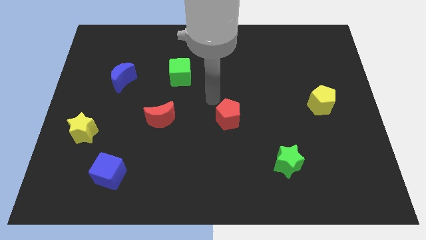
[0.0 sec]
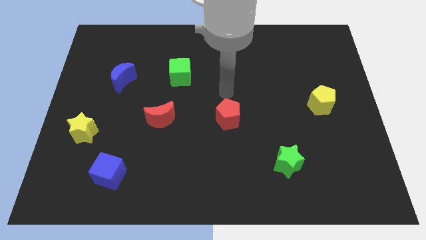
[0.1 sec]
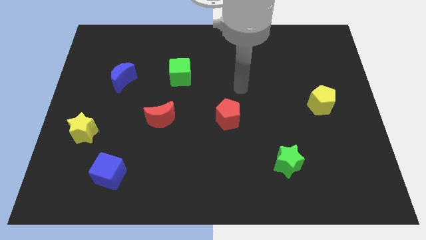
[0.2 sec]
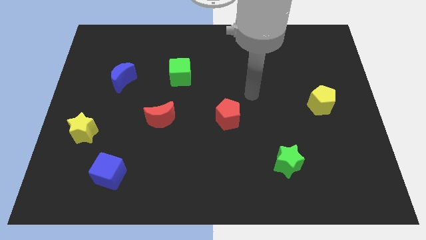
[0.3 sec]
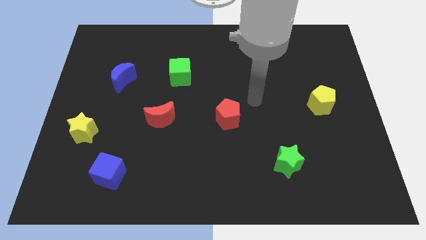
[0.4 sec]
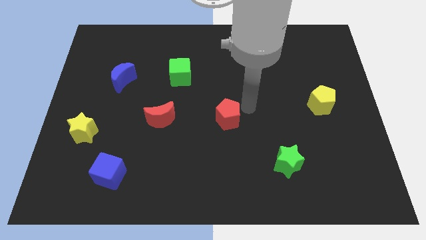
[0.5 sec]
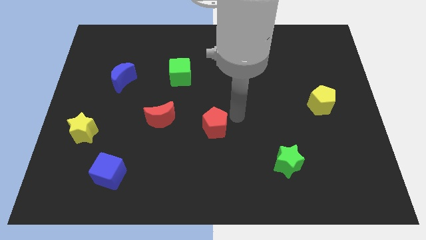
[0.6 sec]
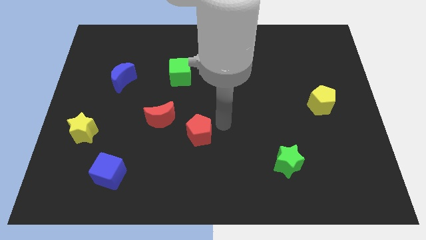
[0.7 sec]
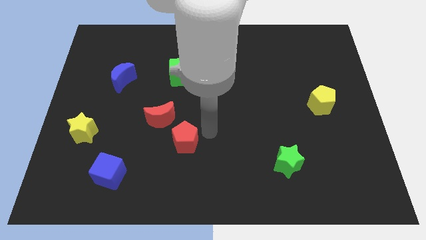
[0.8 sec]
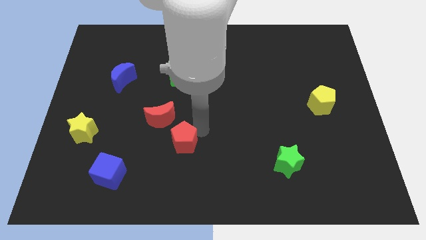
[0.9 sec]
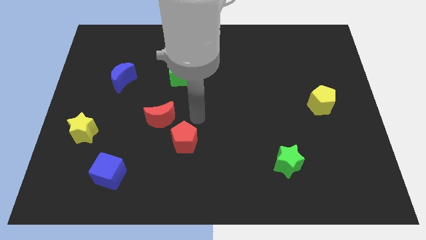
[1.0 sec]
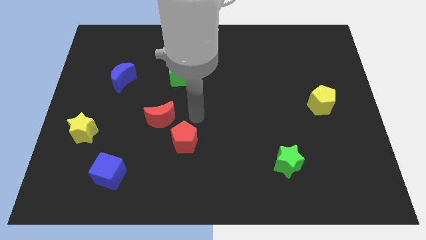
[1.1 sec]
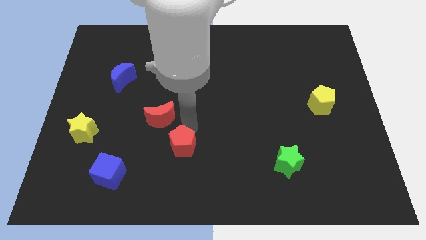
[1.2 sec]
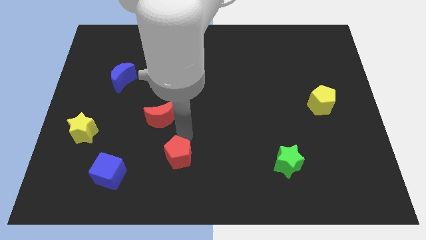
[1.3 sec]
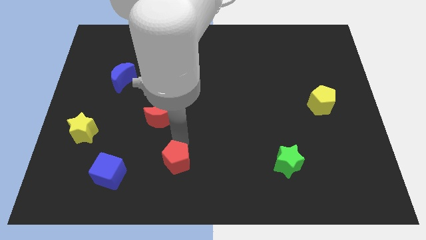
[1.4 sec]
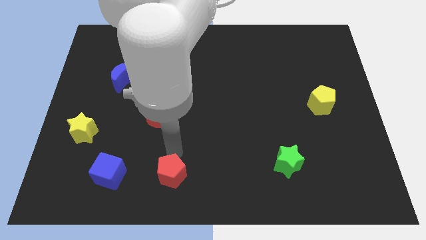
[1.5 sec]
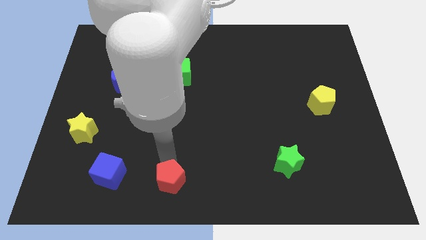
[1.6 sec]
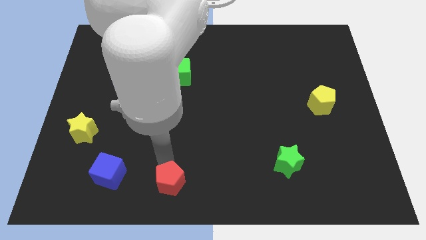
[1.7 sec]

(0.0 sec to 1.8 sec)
put the red pentagon to the right of the blue cube

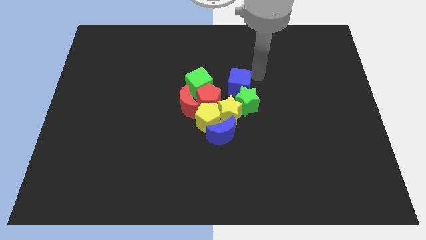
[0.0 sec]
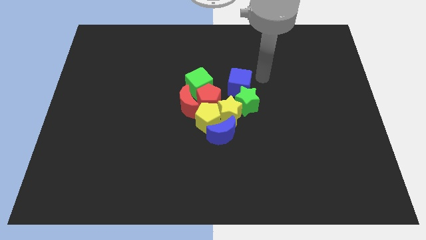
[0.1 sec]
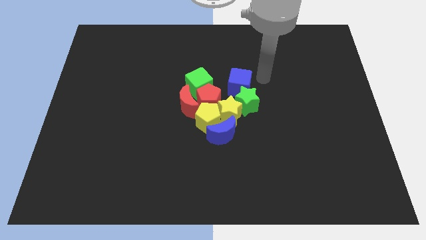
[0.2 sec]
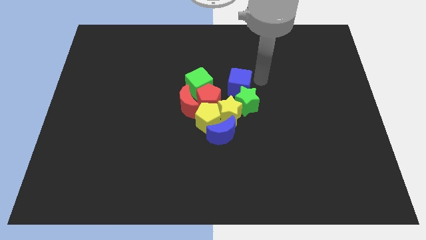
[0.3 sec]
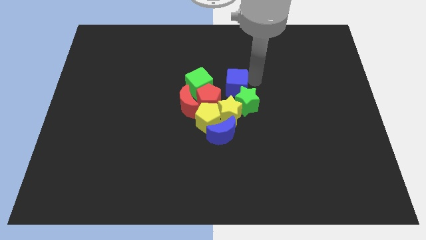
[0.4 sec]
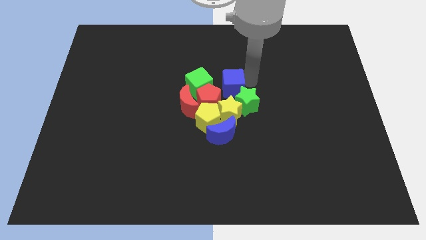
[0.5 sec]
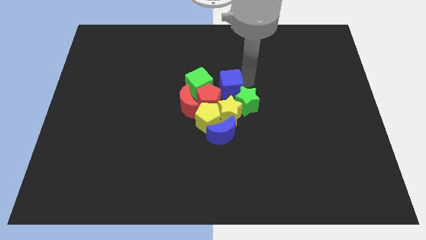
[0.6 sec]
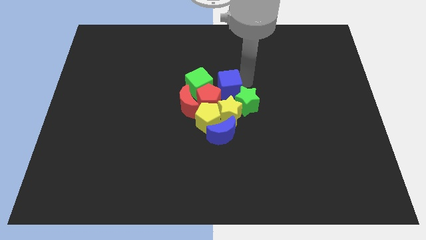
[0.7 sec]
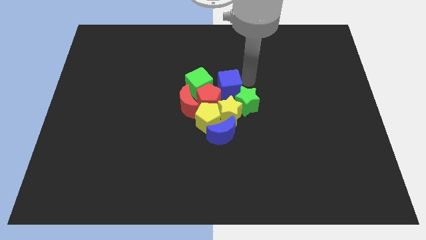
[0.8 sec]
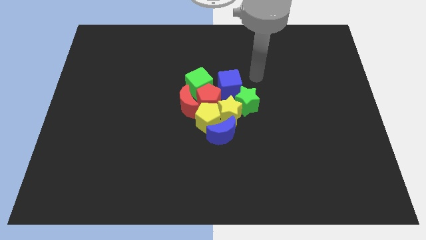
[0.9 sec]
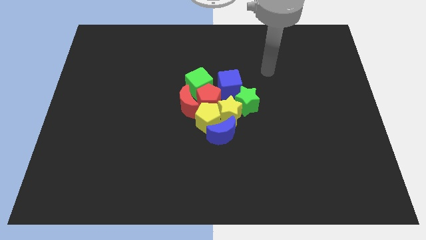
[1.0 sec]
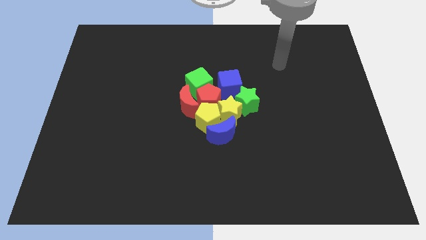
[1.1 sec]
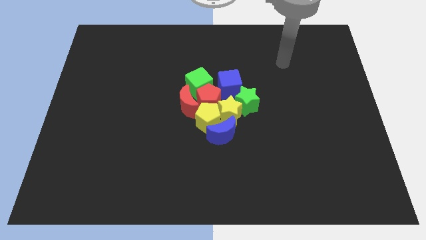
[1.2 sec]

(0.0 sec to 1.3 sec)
move blue cube right above red pentagon

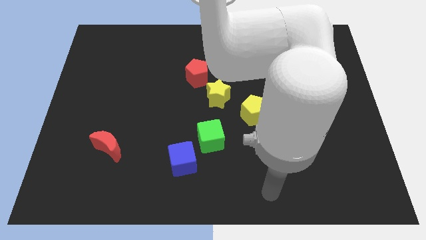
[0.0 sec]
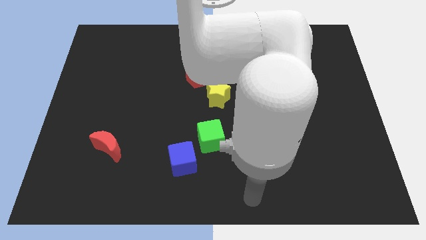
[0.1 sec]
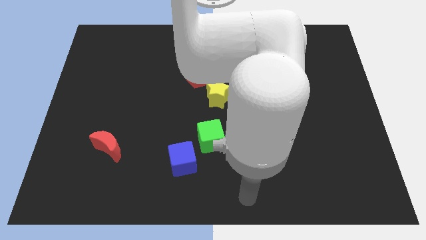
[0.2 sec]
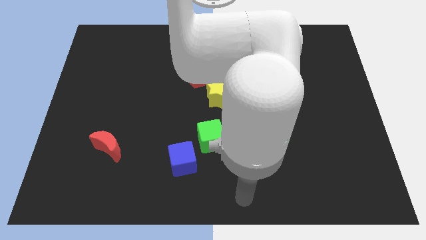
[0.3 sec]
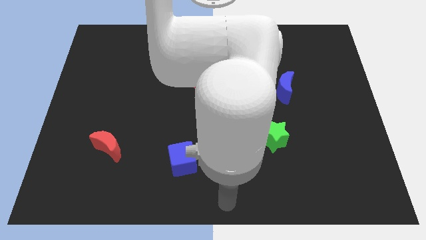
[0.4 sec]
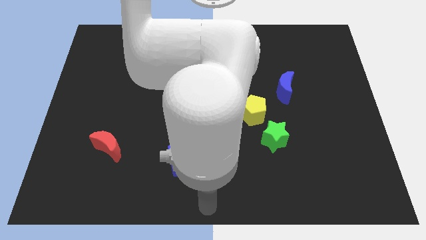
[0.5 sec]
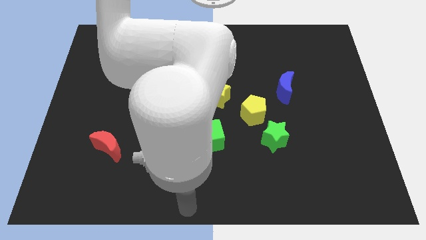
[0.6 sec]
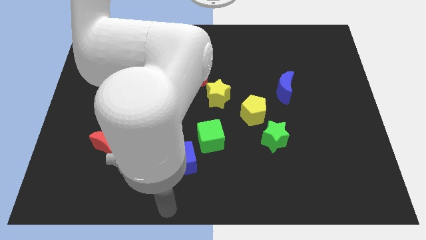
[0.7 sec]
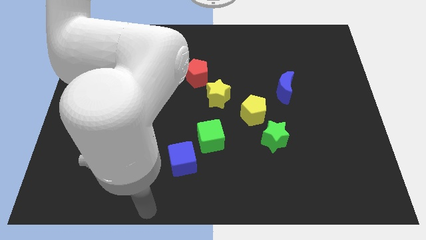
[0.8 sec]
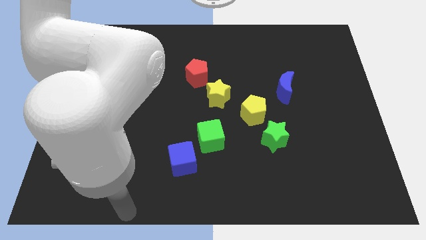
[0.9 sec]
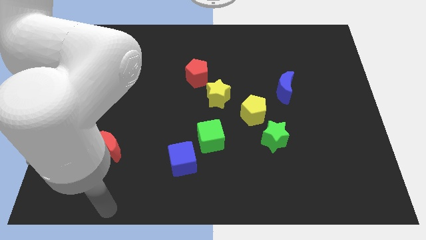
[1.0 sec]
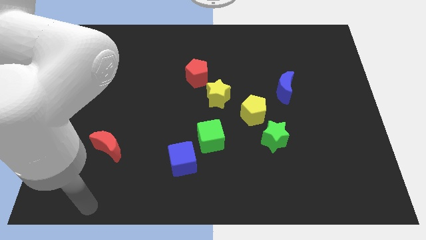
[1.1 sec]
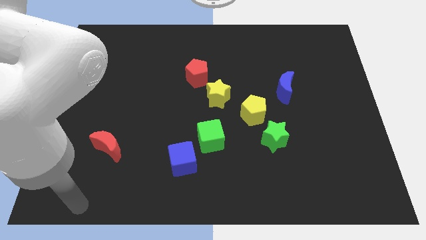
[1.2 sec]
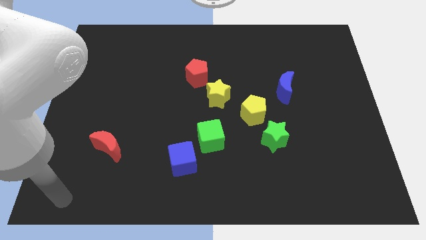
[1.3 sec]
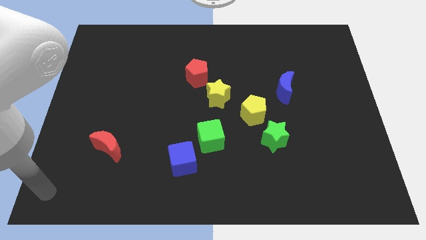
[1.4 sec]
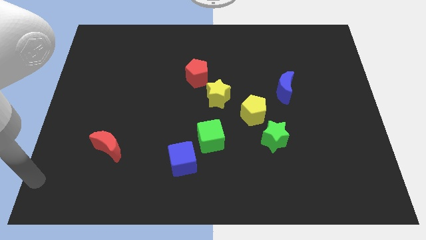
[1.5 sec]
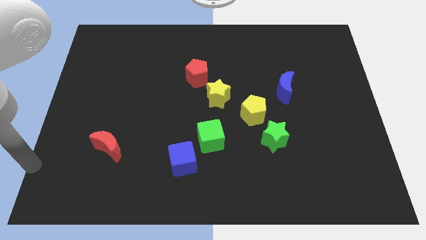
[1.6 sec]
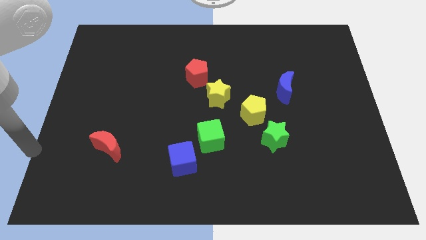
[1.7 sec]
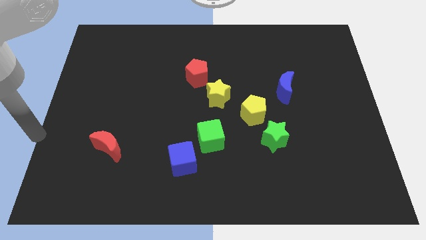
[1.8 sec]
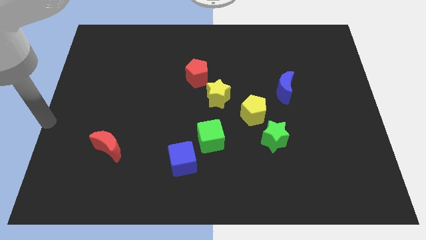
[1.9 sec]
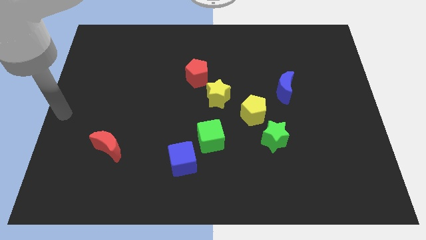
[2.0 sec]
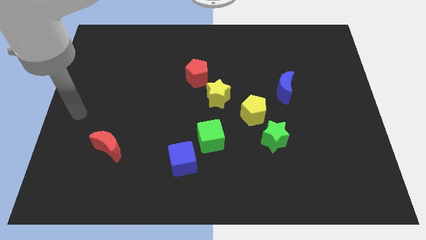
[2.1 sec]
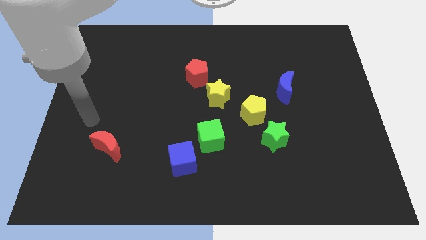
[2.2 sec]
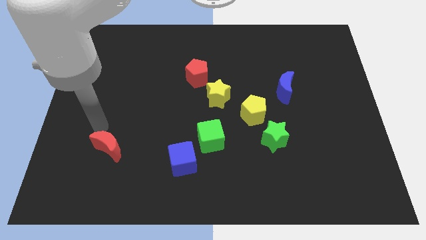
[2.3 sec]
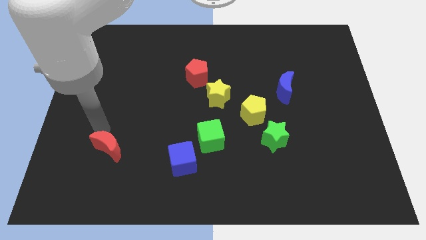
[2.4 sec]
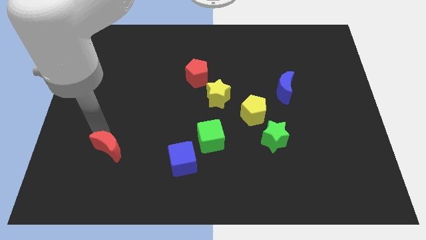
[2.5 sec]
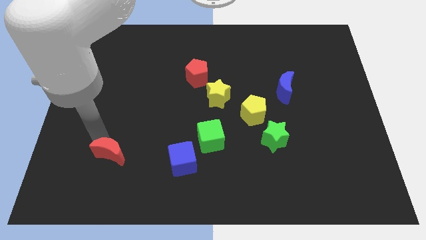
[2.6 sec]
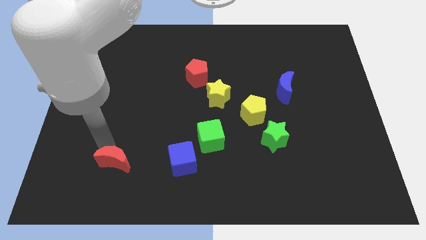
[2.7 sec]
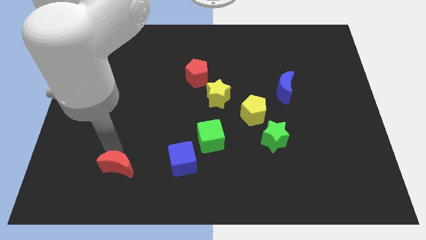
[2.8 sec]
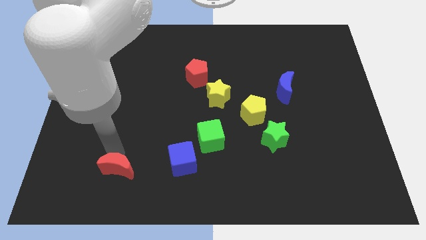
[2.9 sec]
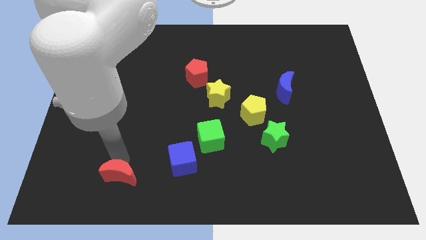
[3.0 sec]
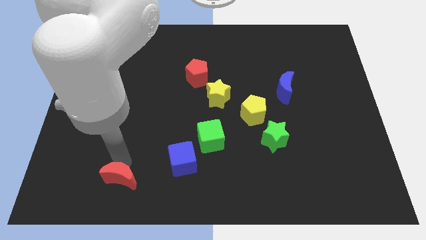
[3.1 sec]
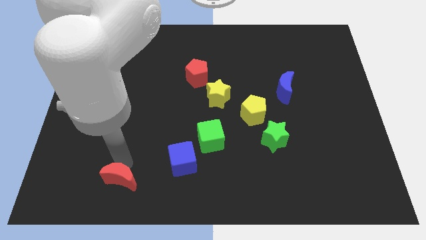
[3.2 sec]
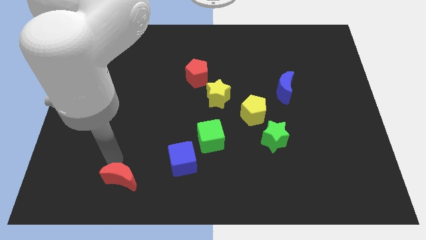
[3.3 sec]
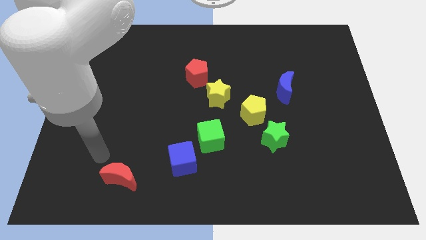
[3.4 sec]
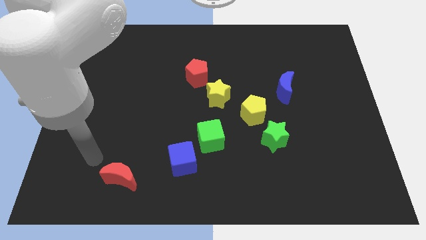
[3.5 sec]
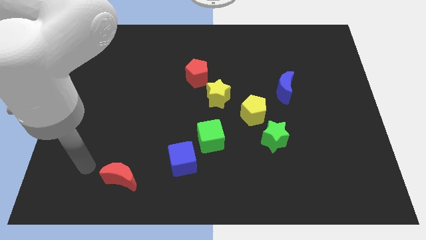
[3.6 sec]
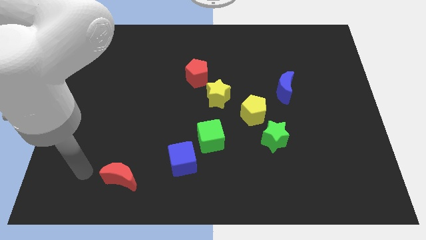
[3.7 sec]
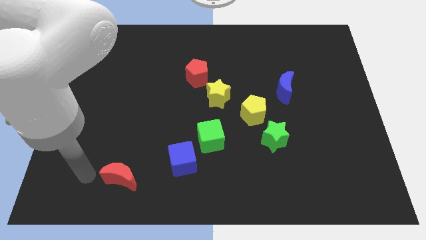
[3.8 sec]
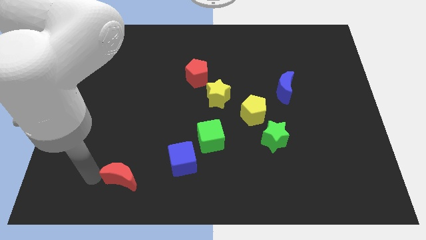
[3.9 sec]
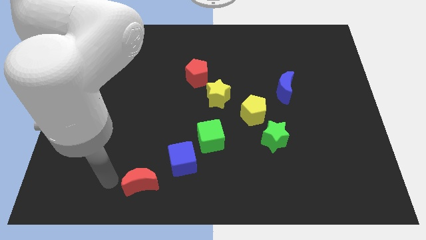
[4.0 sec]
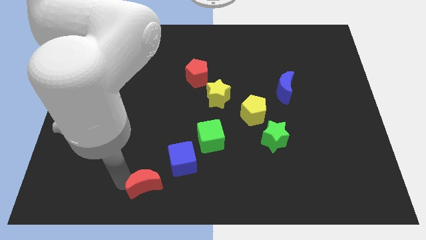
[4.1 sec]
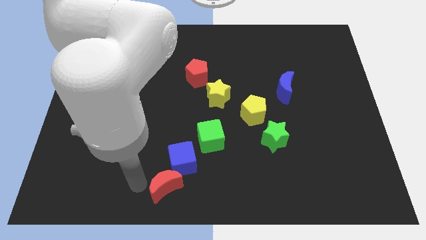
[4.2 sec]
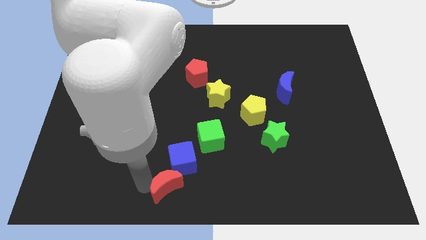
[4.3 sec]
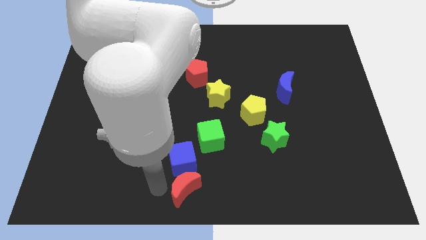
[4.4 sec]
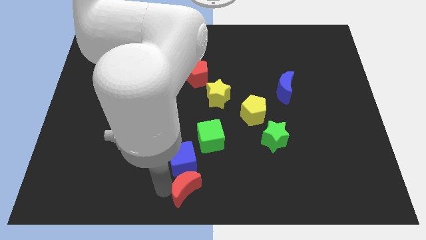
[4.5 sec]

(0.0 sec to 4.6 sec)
place the red moon below the blue cube

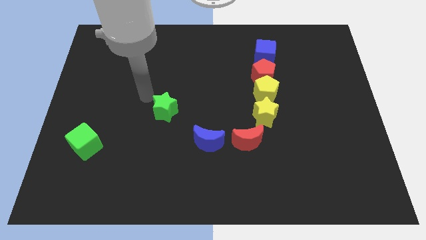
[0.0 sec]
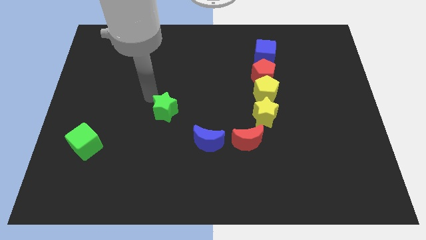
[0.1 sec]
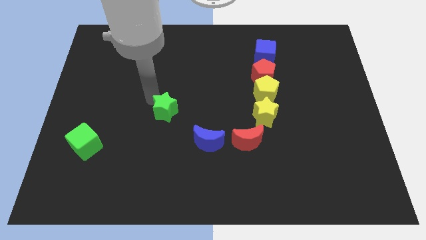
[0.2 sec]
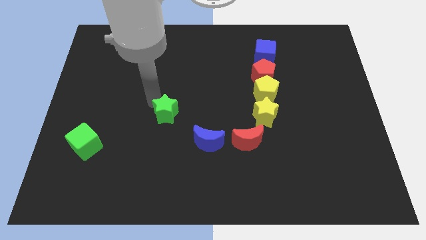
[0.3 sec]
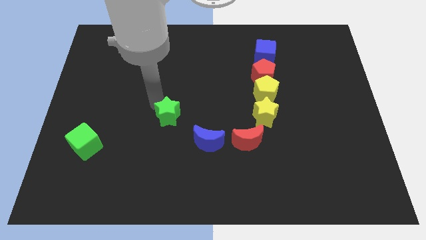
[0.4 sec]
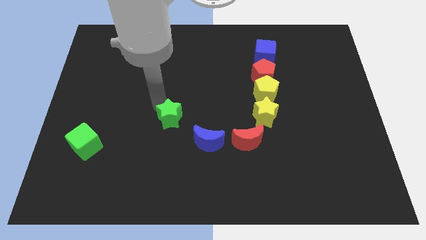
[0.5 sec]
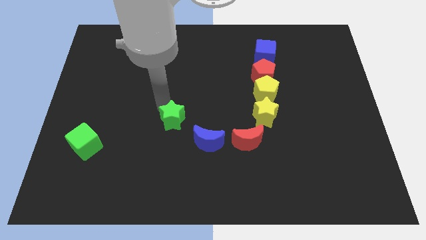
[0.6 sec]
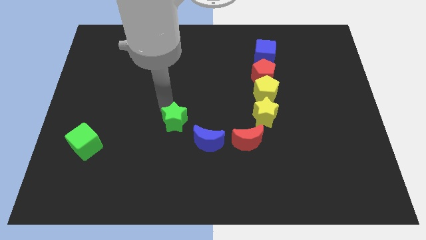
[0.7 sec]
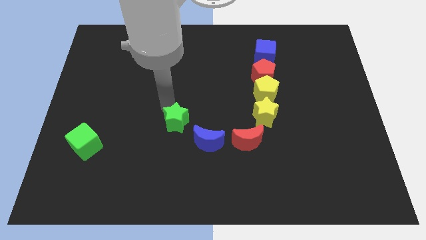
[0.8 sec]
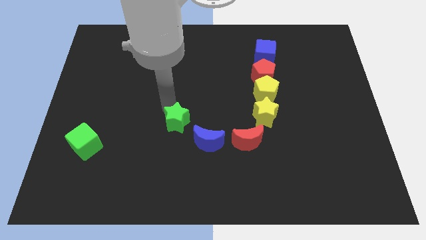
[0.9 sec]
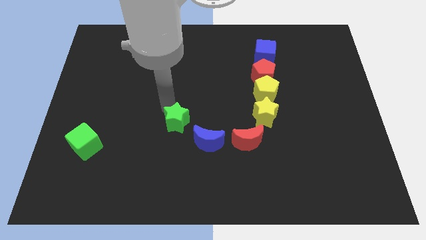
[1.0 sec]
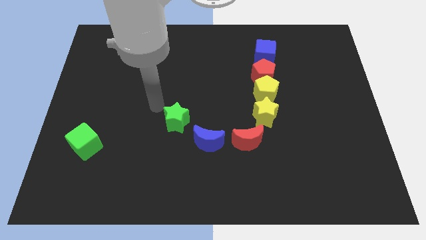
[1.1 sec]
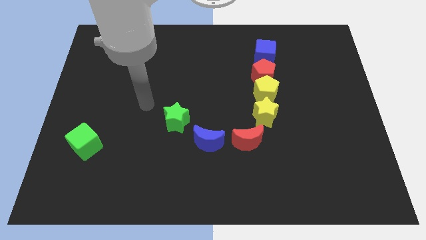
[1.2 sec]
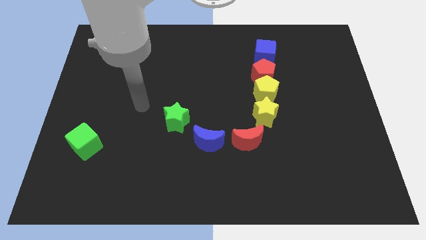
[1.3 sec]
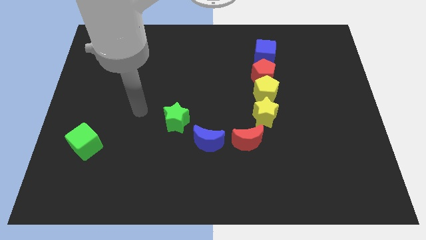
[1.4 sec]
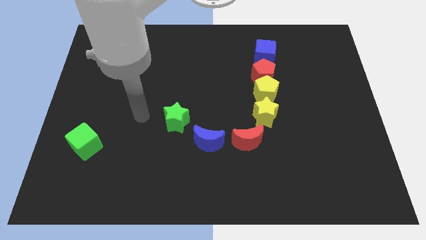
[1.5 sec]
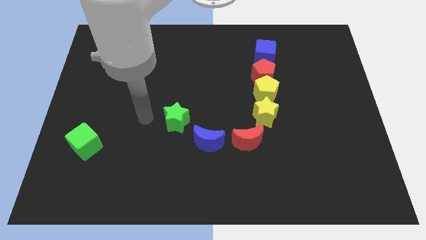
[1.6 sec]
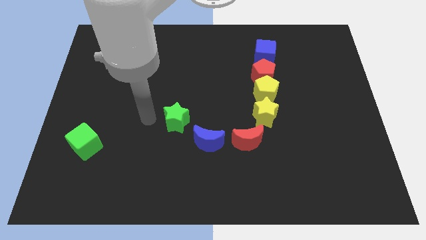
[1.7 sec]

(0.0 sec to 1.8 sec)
place green star to the top left of blue moon
